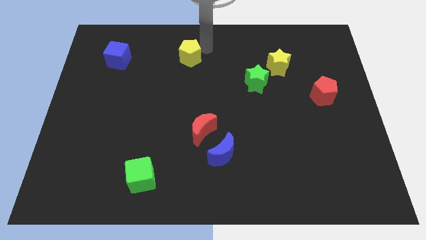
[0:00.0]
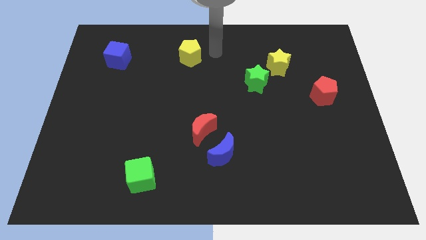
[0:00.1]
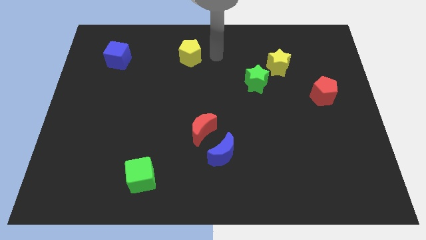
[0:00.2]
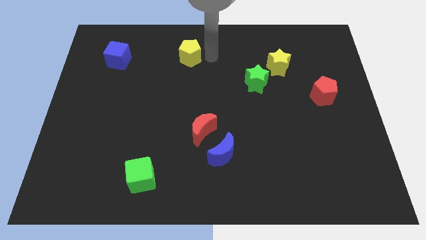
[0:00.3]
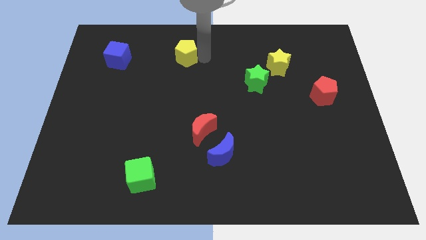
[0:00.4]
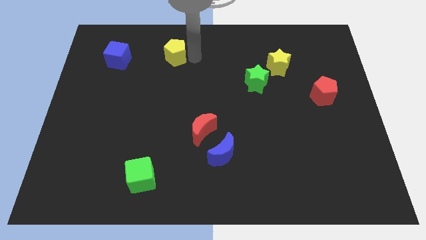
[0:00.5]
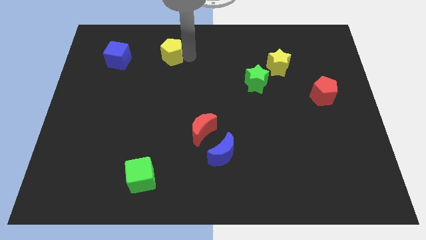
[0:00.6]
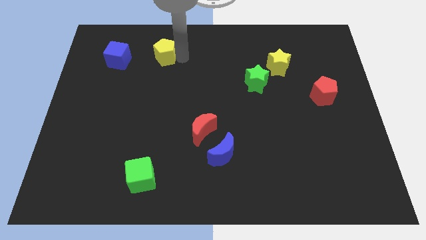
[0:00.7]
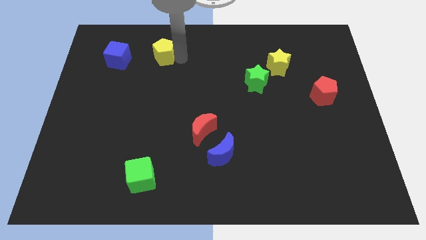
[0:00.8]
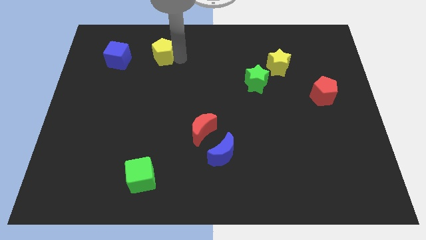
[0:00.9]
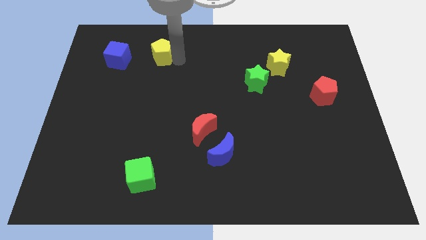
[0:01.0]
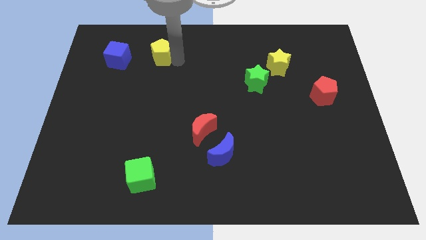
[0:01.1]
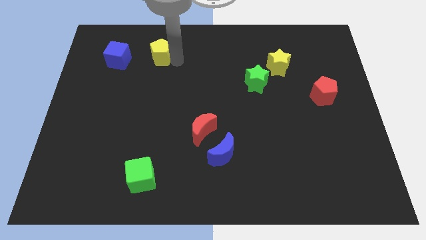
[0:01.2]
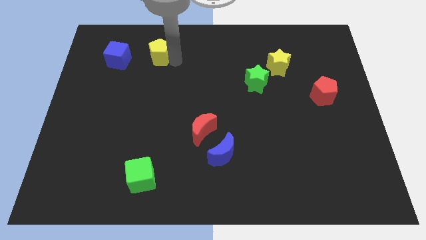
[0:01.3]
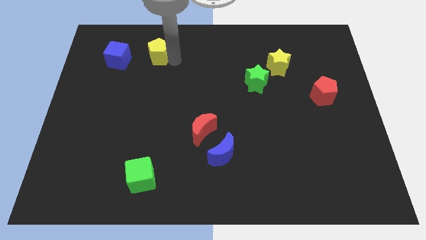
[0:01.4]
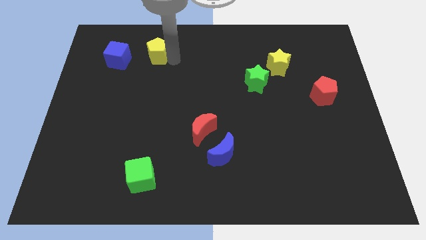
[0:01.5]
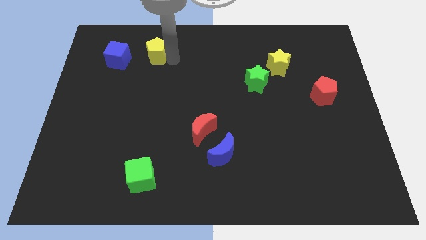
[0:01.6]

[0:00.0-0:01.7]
place the yellow pentagon close to the blue cube

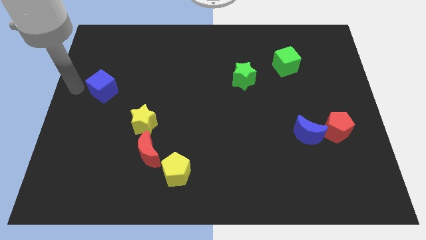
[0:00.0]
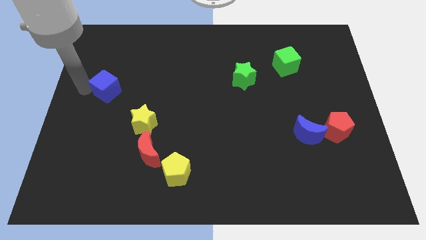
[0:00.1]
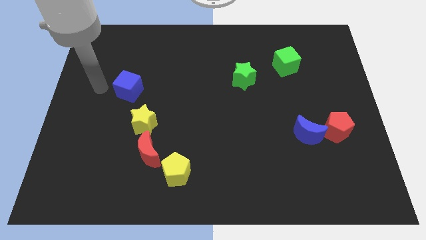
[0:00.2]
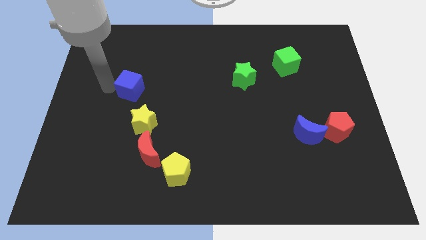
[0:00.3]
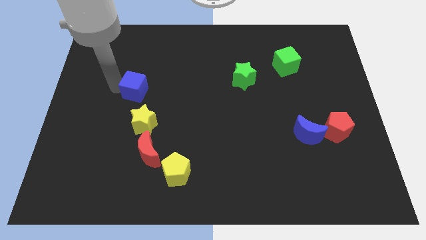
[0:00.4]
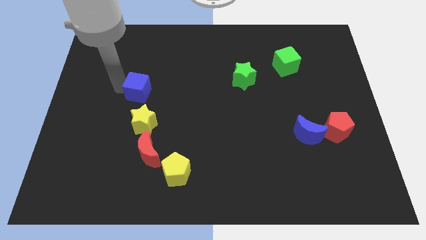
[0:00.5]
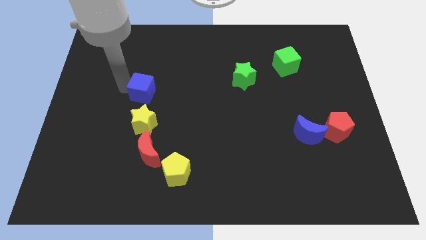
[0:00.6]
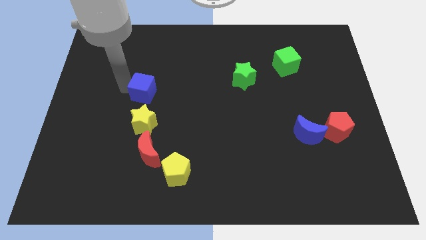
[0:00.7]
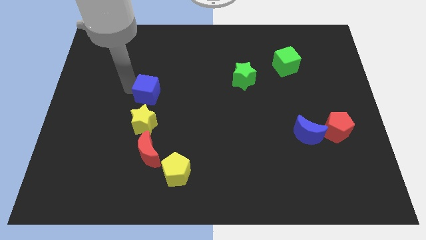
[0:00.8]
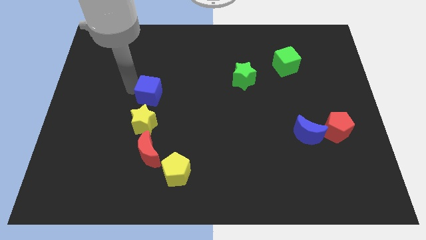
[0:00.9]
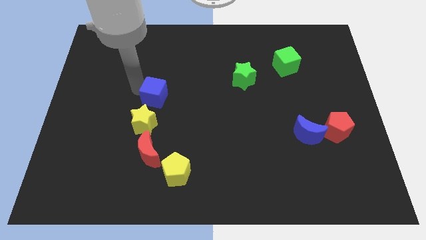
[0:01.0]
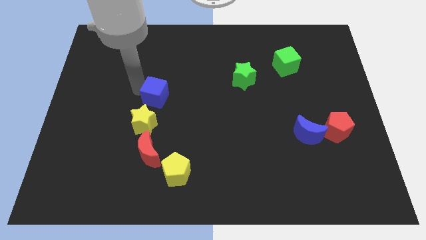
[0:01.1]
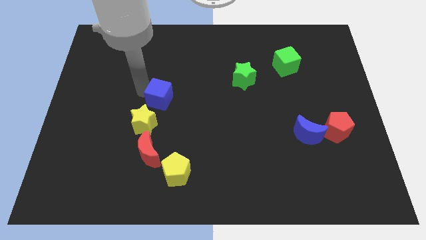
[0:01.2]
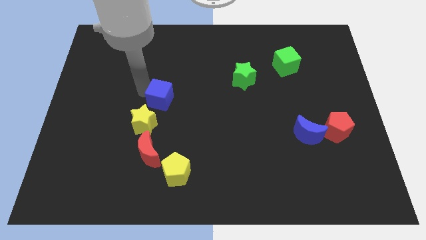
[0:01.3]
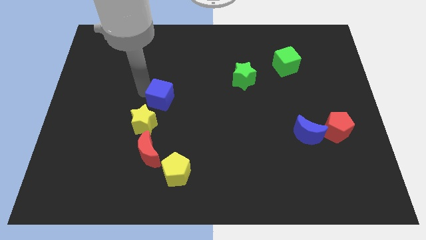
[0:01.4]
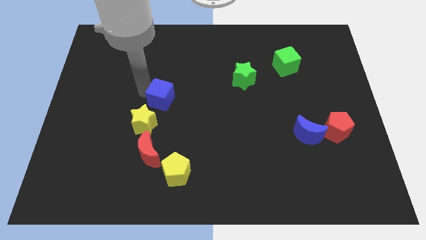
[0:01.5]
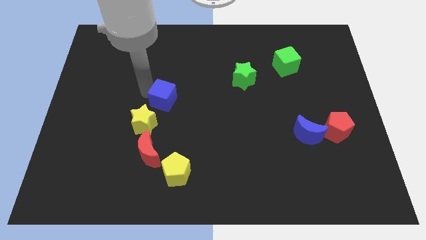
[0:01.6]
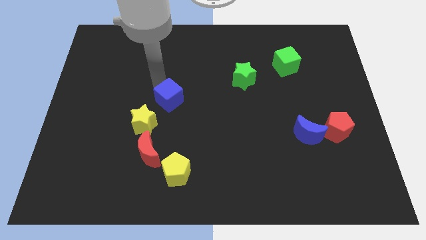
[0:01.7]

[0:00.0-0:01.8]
move the blue cube towards the yellow star

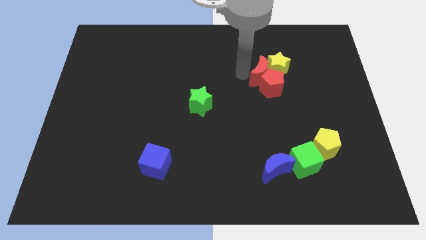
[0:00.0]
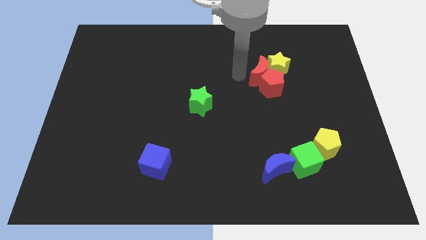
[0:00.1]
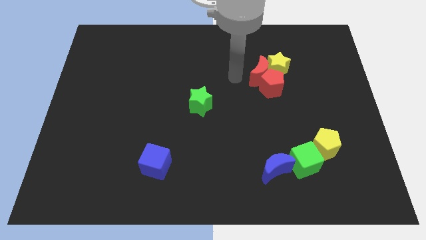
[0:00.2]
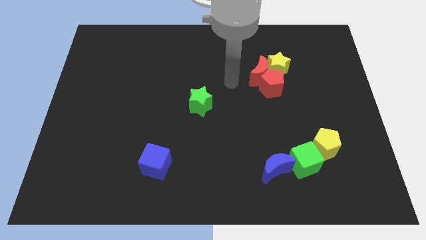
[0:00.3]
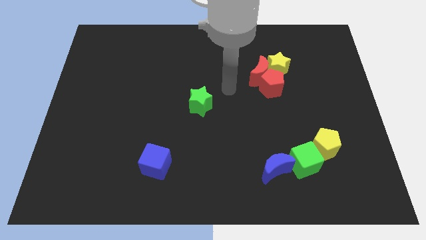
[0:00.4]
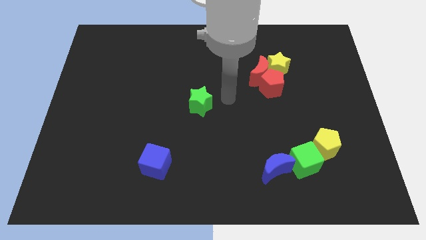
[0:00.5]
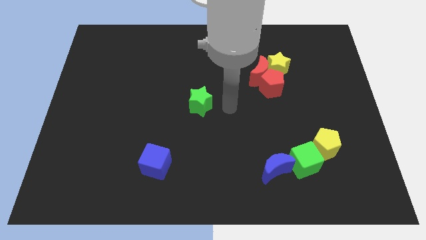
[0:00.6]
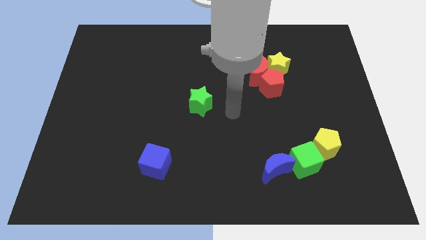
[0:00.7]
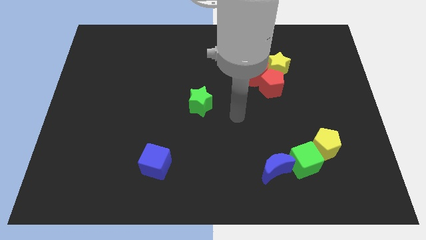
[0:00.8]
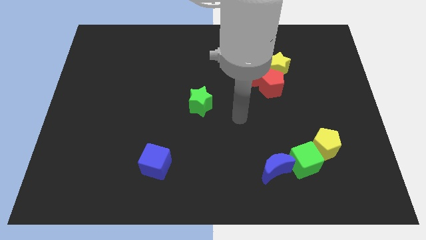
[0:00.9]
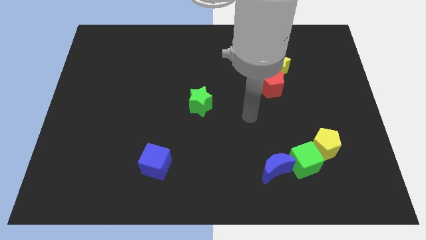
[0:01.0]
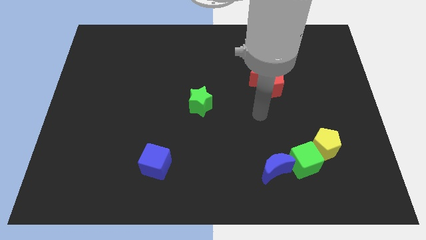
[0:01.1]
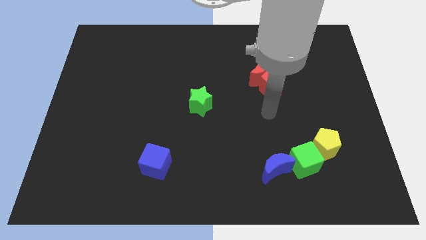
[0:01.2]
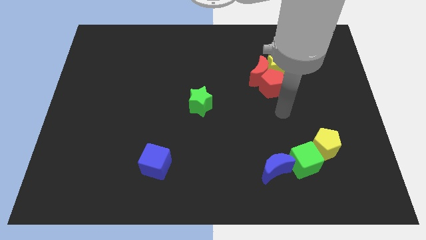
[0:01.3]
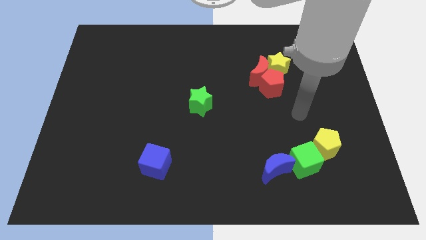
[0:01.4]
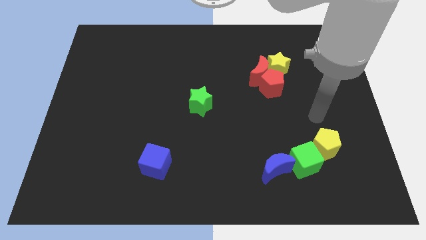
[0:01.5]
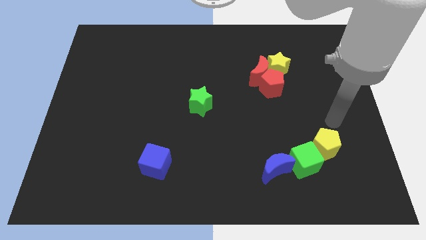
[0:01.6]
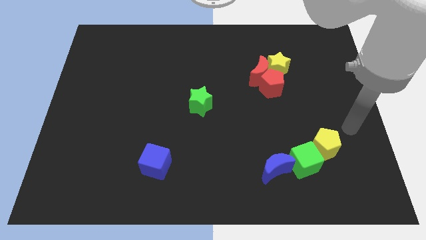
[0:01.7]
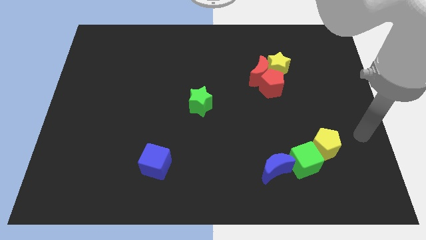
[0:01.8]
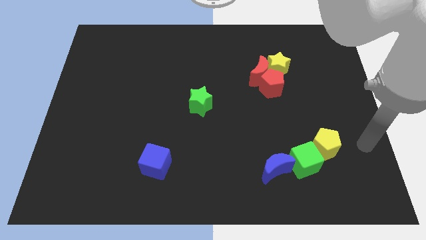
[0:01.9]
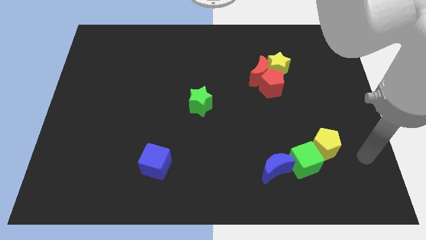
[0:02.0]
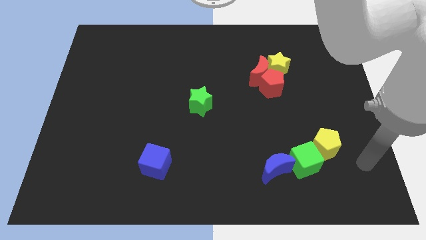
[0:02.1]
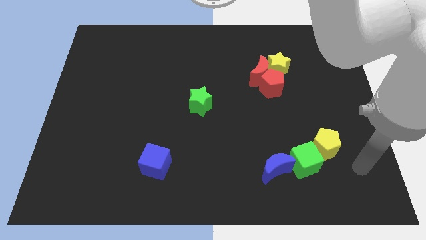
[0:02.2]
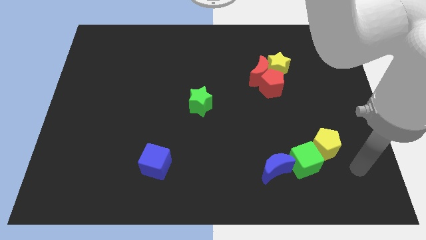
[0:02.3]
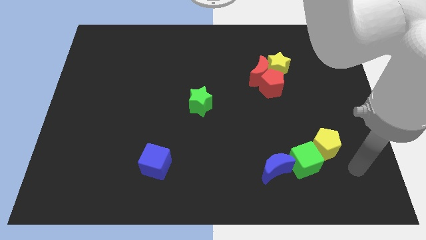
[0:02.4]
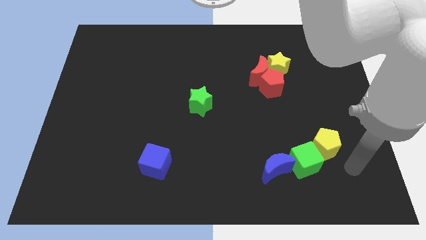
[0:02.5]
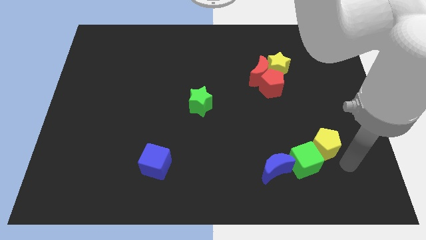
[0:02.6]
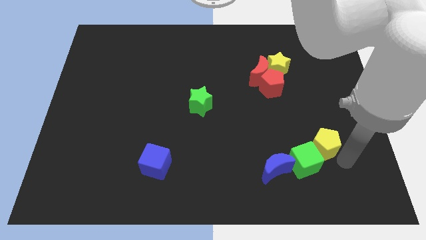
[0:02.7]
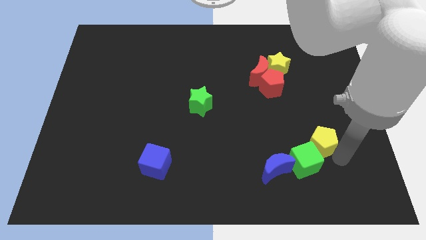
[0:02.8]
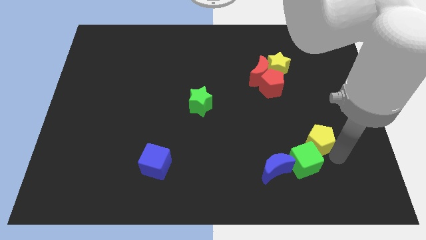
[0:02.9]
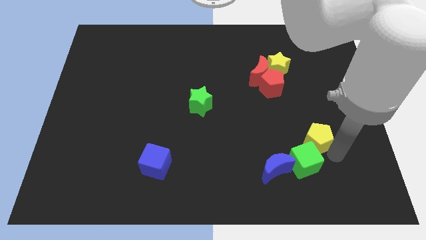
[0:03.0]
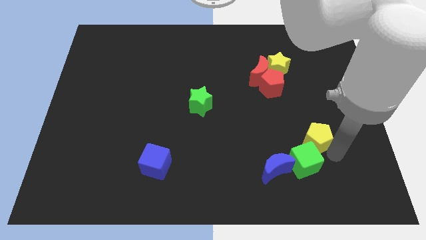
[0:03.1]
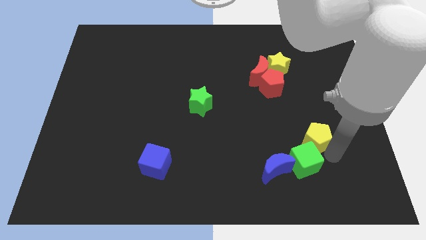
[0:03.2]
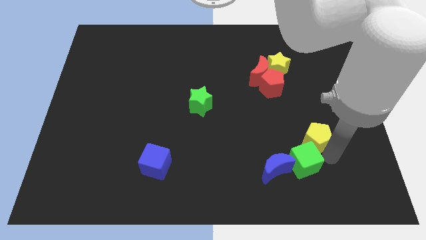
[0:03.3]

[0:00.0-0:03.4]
move the arm away from the red moon

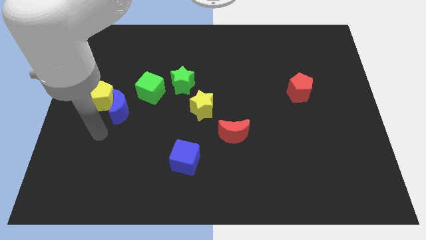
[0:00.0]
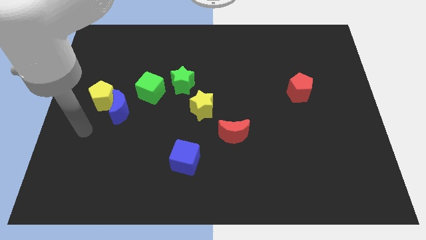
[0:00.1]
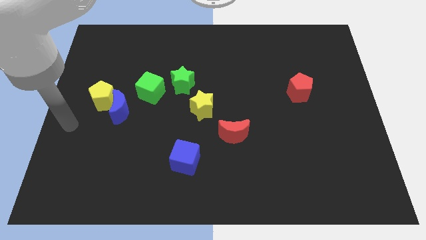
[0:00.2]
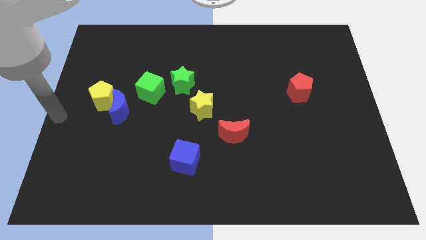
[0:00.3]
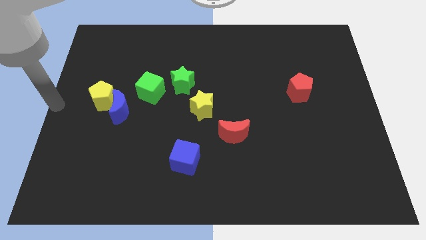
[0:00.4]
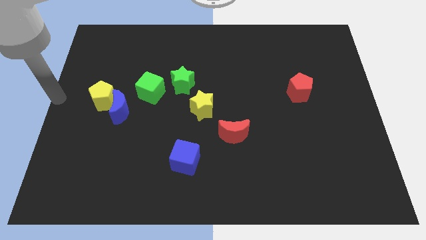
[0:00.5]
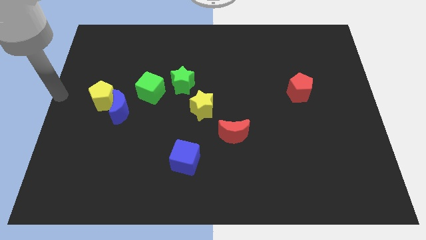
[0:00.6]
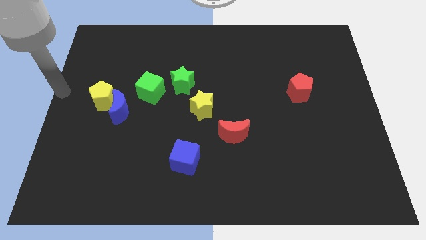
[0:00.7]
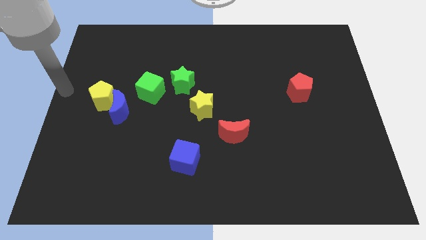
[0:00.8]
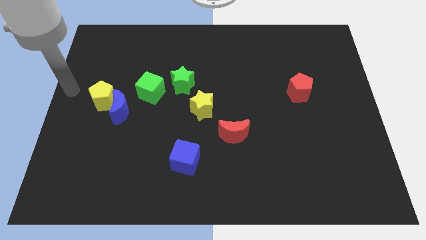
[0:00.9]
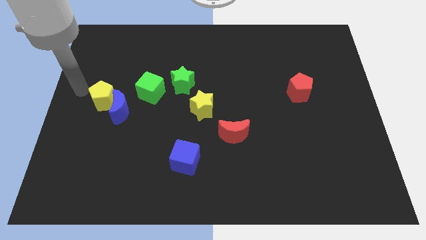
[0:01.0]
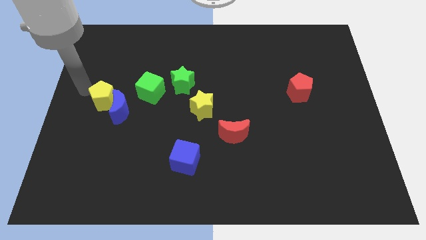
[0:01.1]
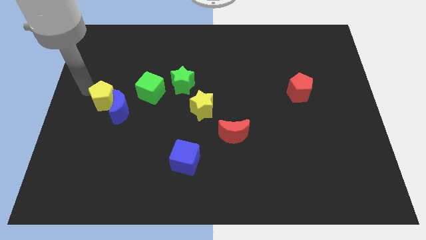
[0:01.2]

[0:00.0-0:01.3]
move your arm towards the yellow pentagon

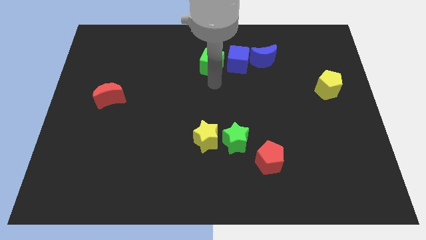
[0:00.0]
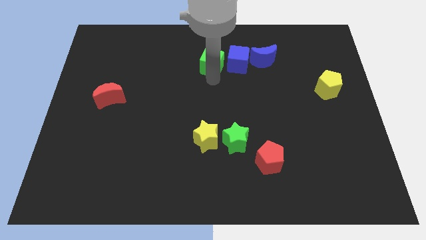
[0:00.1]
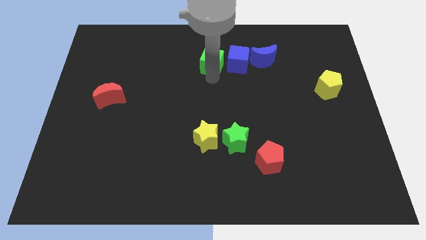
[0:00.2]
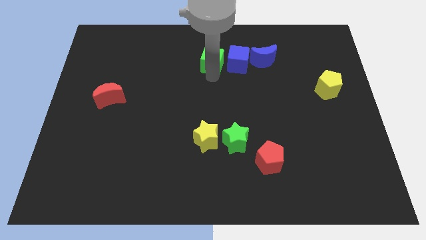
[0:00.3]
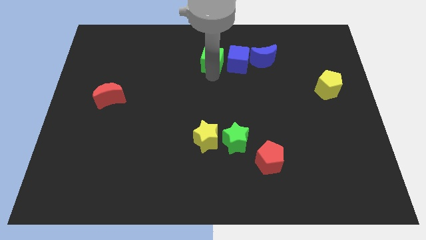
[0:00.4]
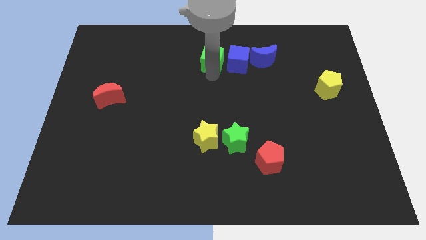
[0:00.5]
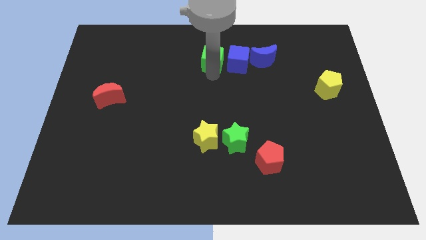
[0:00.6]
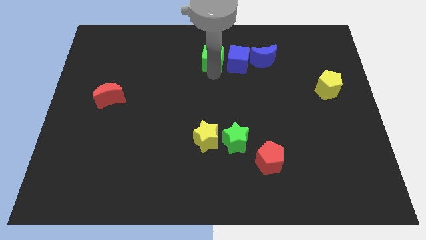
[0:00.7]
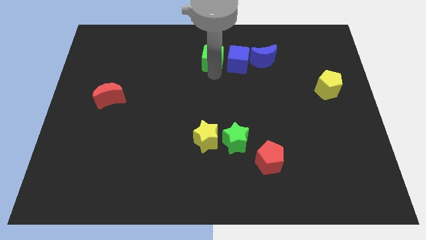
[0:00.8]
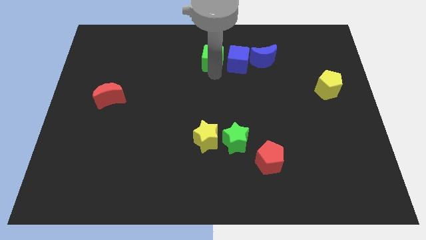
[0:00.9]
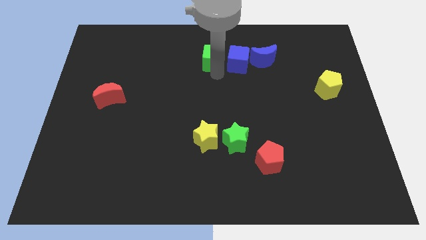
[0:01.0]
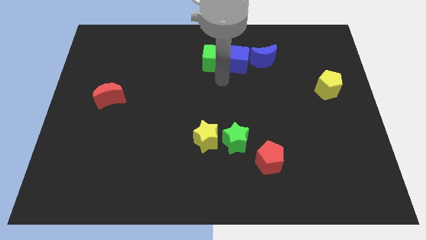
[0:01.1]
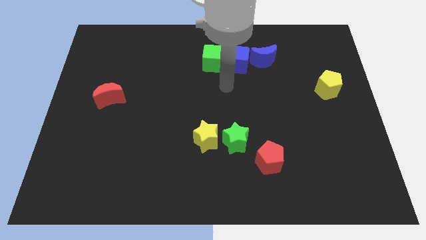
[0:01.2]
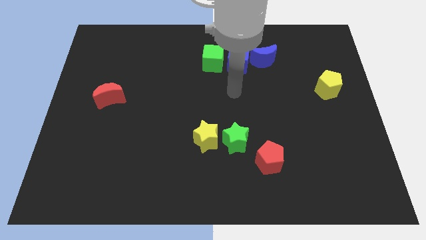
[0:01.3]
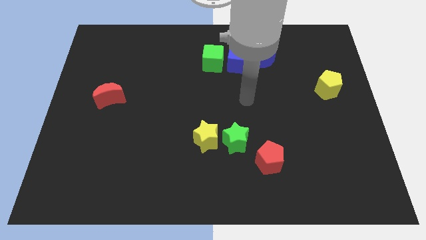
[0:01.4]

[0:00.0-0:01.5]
move the green cube slightly to the up
